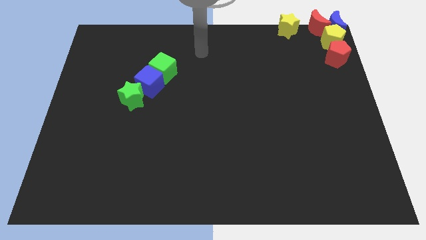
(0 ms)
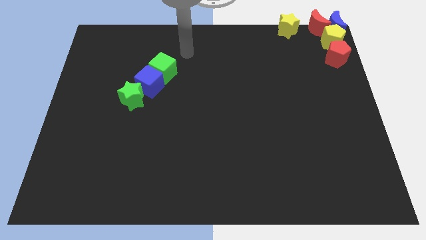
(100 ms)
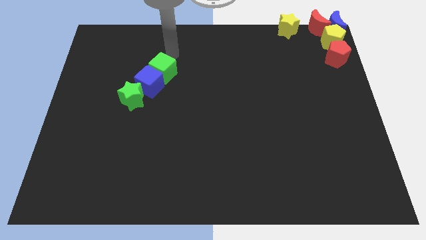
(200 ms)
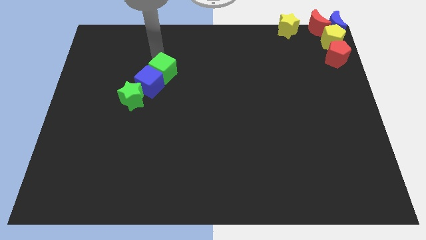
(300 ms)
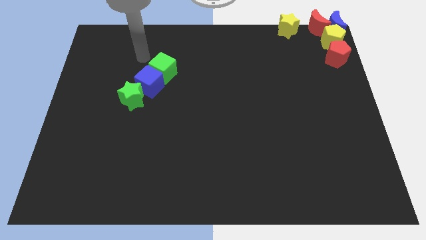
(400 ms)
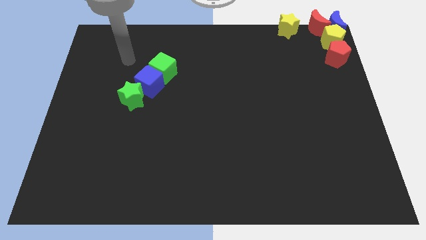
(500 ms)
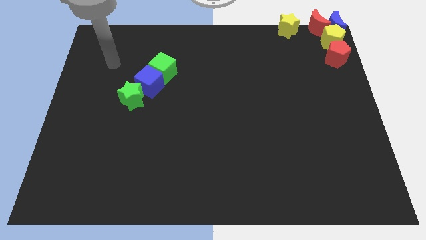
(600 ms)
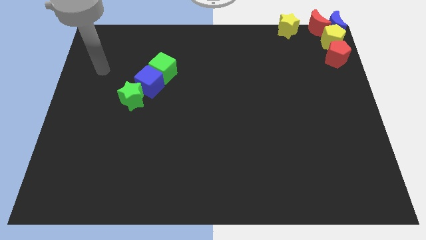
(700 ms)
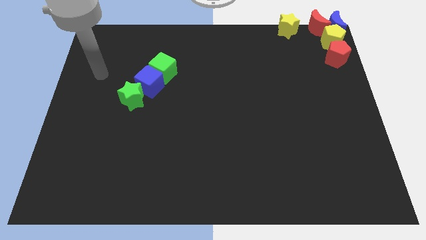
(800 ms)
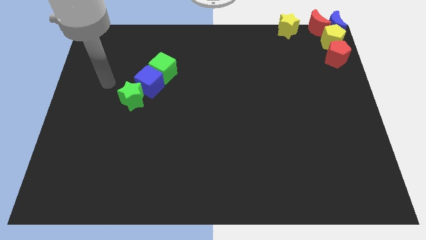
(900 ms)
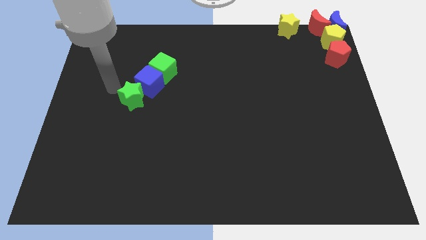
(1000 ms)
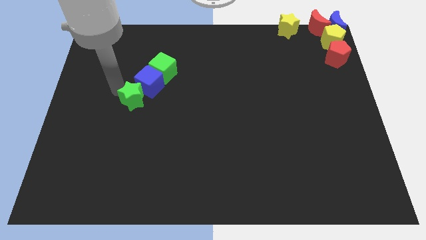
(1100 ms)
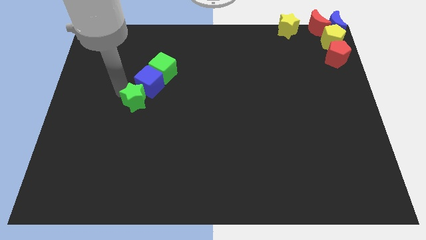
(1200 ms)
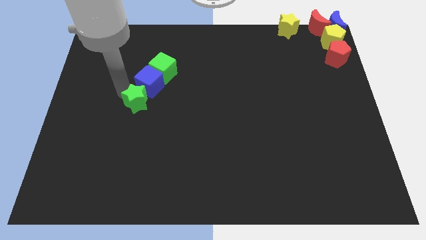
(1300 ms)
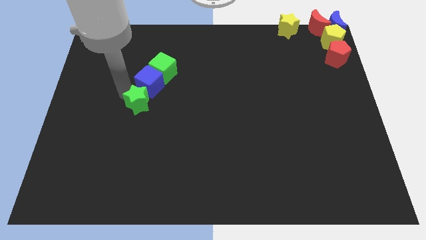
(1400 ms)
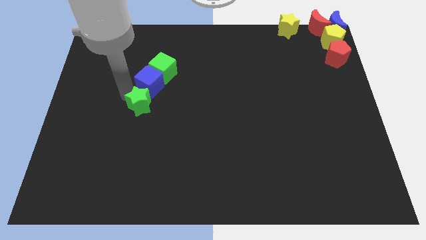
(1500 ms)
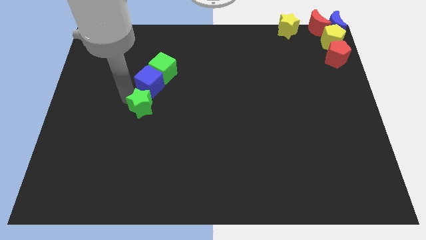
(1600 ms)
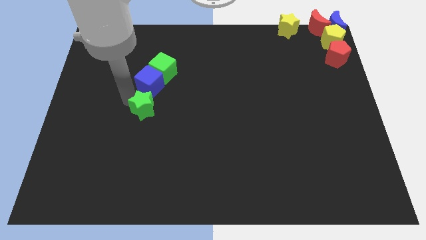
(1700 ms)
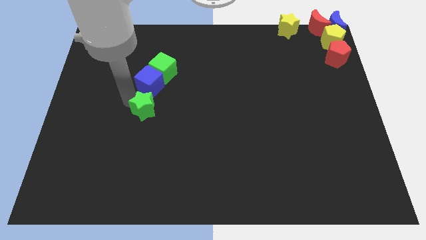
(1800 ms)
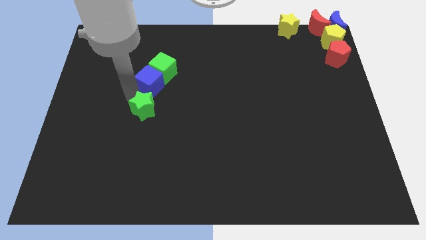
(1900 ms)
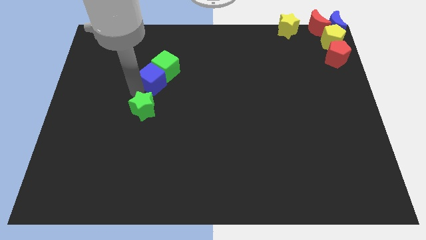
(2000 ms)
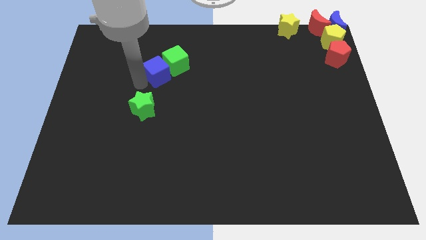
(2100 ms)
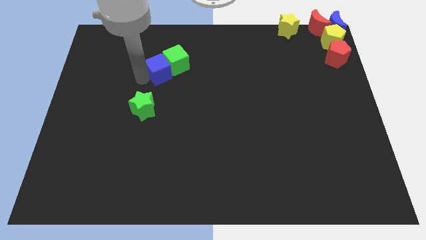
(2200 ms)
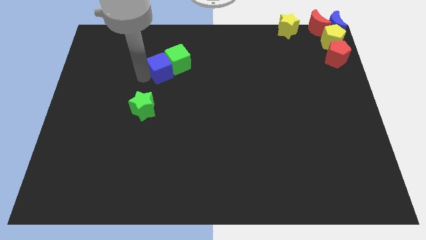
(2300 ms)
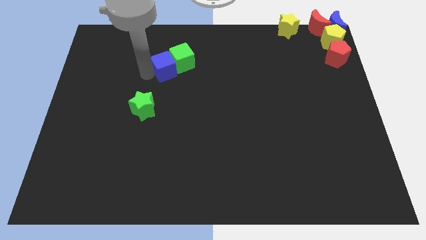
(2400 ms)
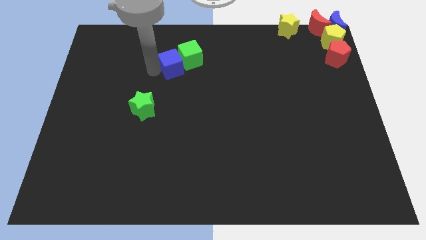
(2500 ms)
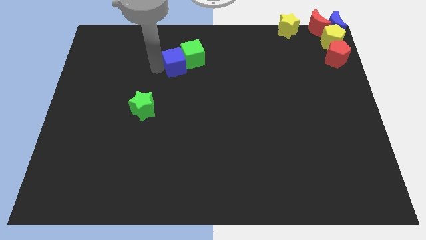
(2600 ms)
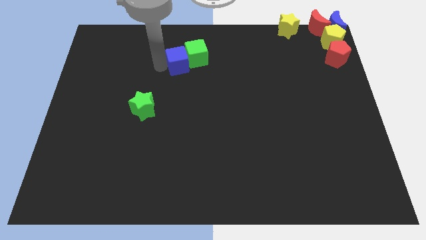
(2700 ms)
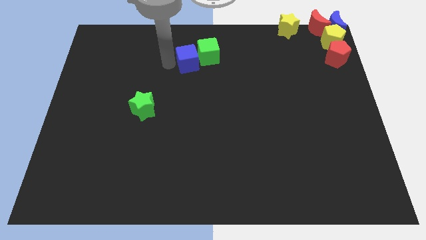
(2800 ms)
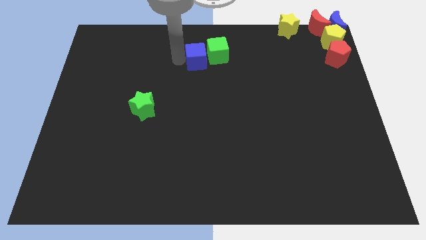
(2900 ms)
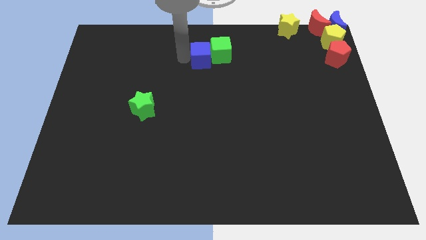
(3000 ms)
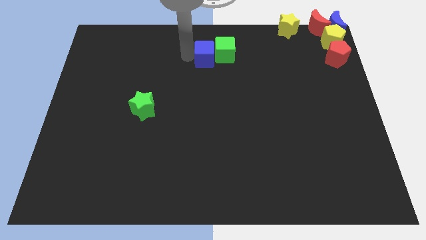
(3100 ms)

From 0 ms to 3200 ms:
push the group of cubes away from the green star

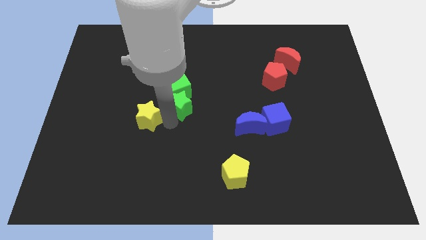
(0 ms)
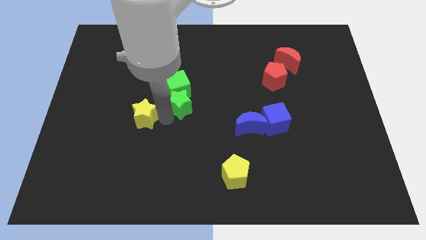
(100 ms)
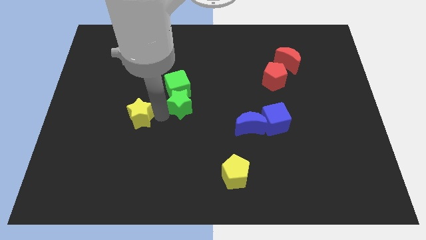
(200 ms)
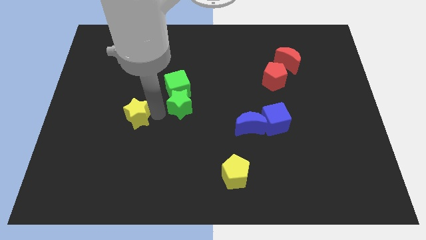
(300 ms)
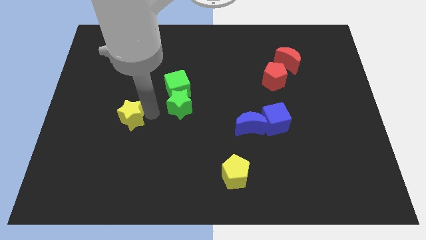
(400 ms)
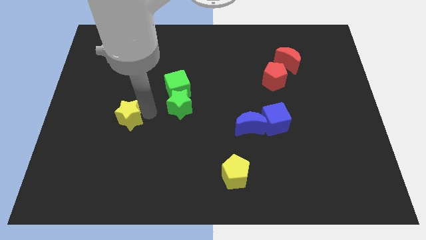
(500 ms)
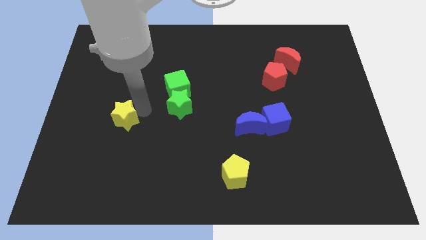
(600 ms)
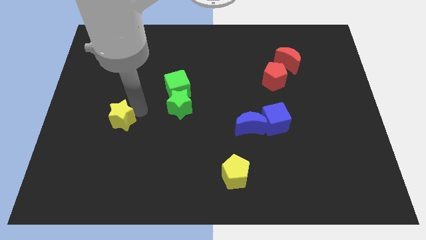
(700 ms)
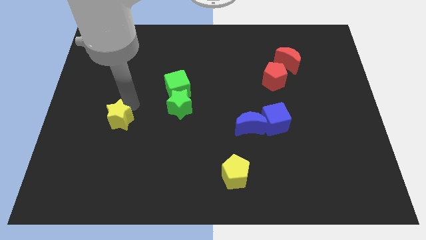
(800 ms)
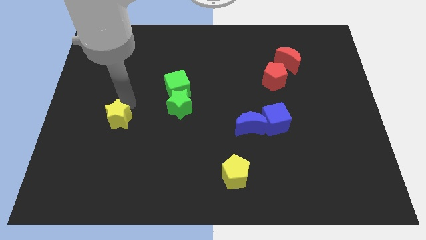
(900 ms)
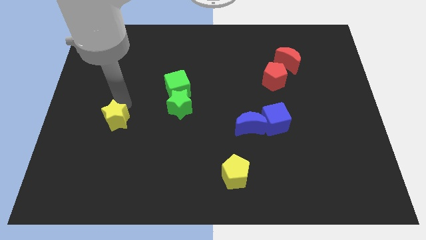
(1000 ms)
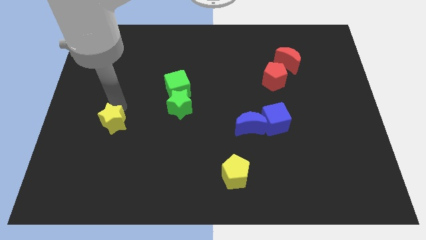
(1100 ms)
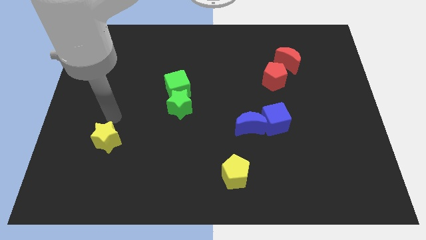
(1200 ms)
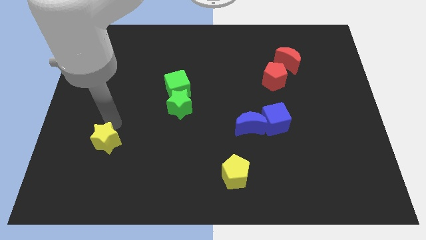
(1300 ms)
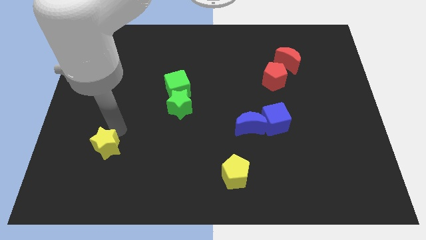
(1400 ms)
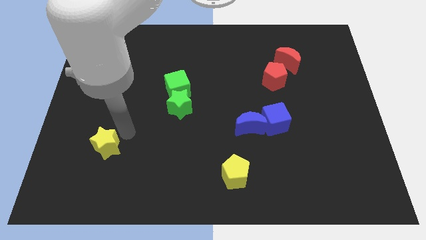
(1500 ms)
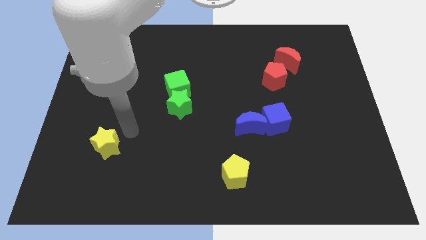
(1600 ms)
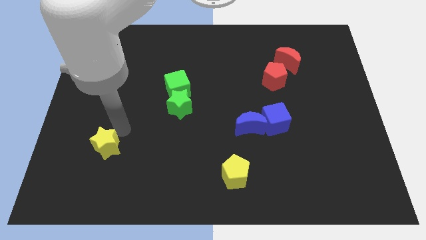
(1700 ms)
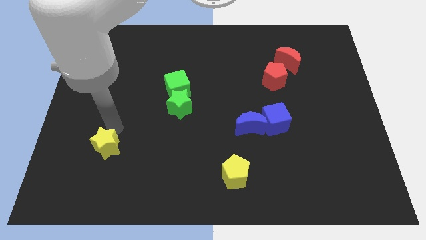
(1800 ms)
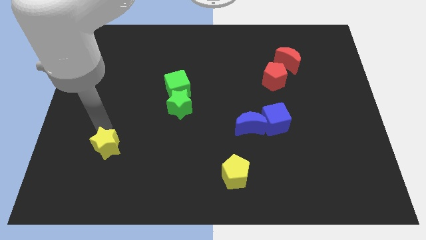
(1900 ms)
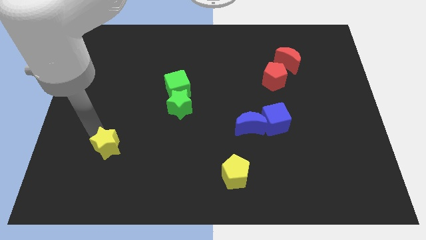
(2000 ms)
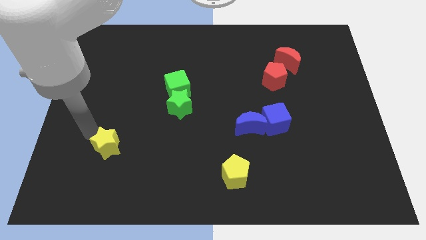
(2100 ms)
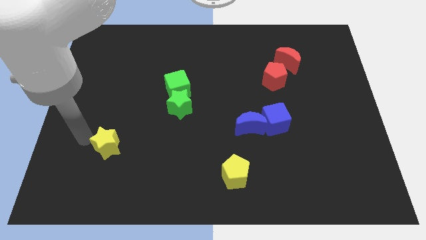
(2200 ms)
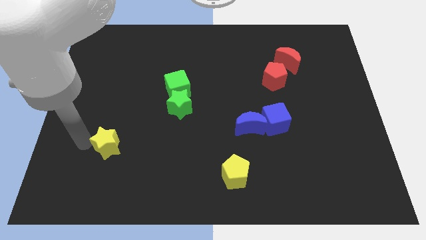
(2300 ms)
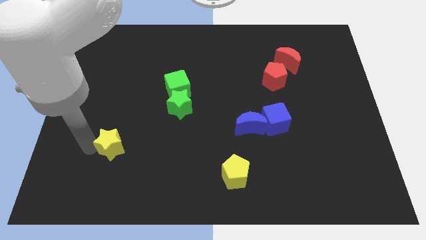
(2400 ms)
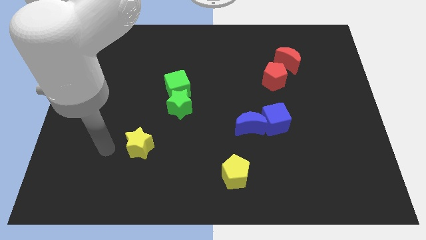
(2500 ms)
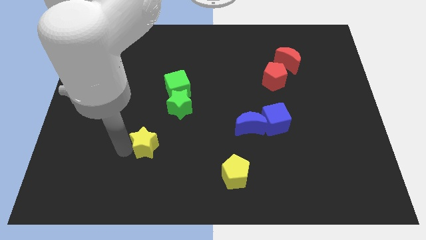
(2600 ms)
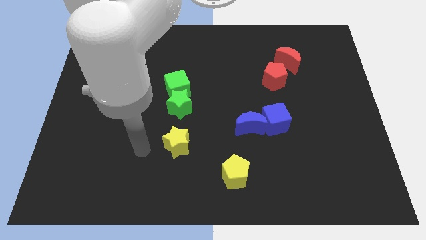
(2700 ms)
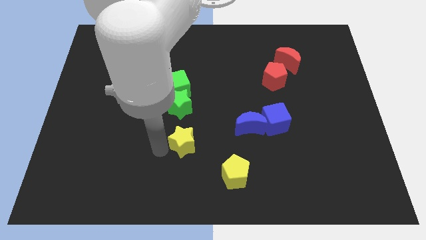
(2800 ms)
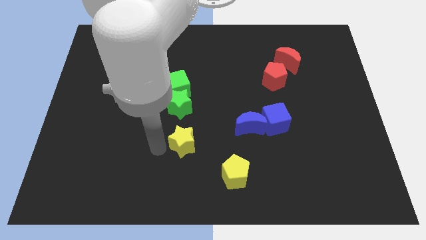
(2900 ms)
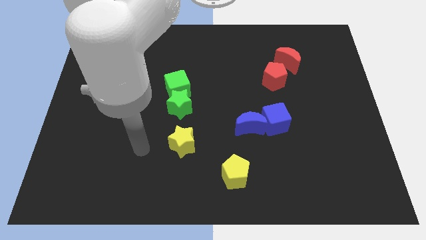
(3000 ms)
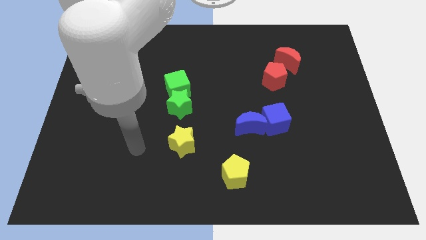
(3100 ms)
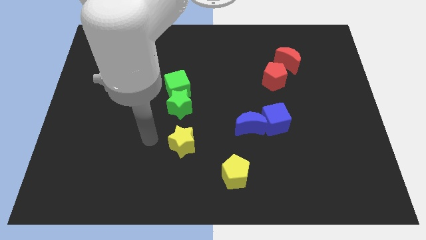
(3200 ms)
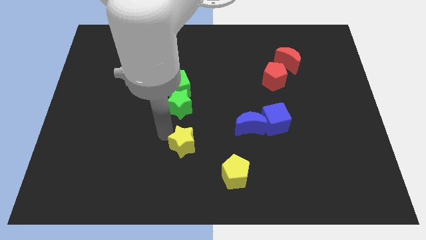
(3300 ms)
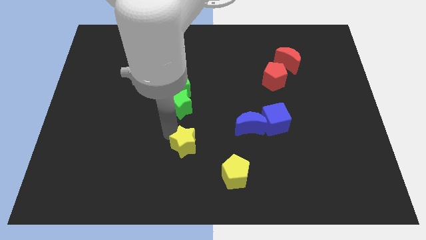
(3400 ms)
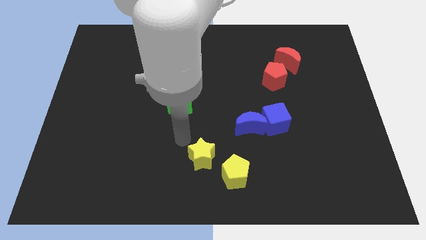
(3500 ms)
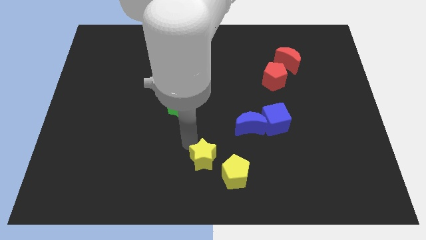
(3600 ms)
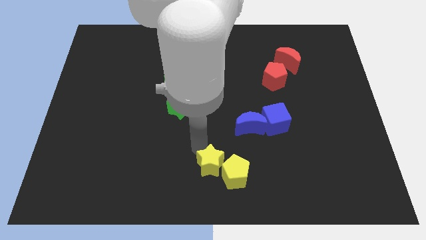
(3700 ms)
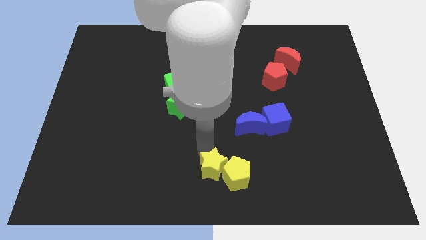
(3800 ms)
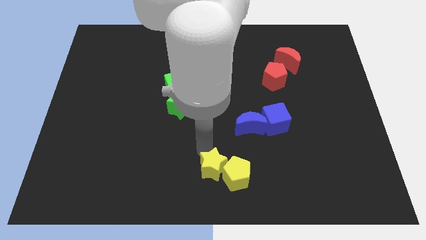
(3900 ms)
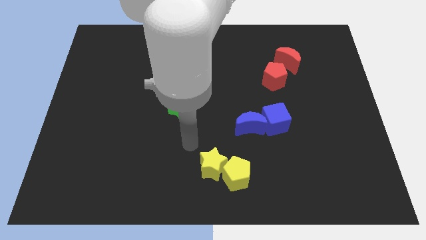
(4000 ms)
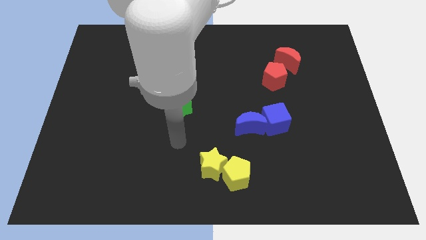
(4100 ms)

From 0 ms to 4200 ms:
push the yellow satr to the left of the yellow pentagon

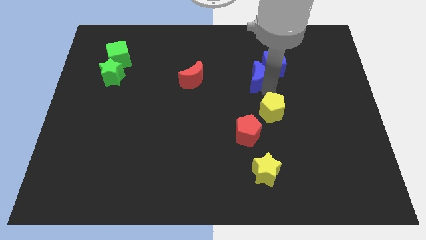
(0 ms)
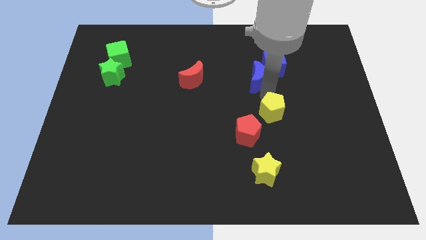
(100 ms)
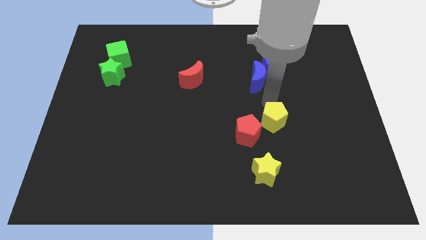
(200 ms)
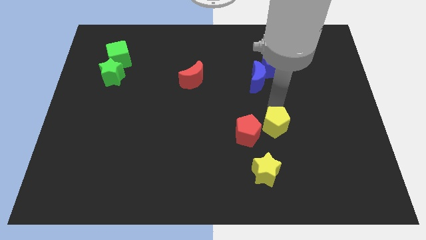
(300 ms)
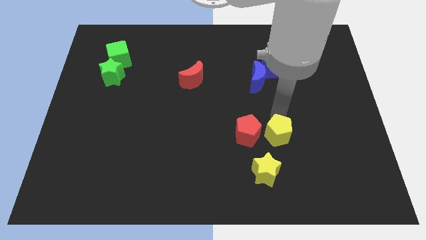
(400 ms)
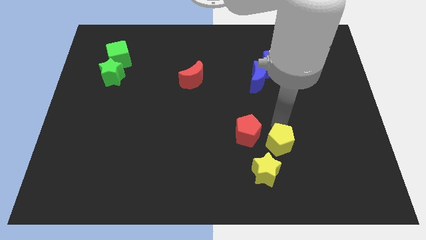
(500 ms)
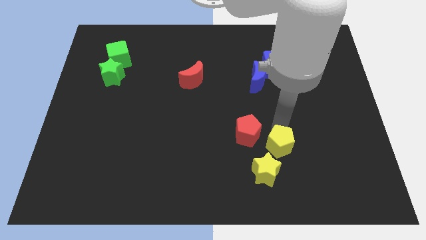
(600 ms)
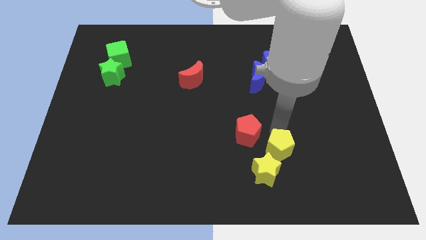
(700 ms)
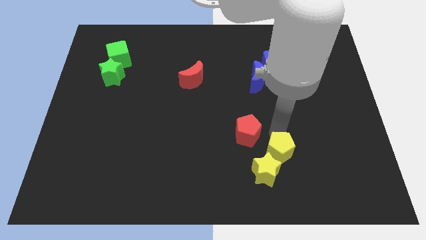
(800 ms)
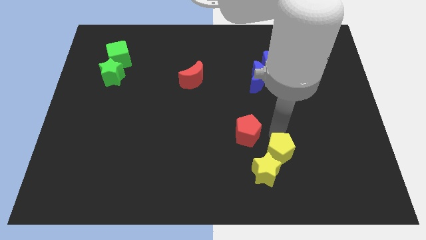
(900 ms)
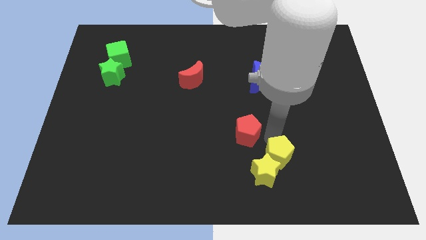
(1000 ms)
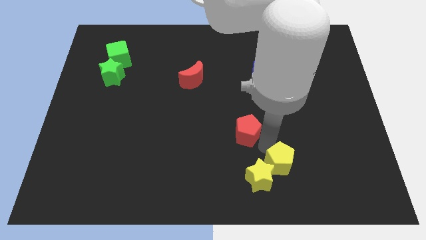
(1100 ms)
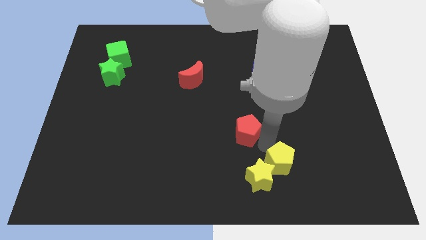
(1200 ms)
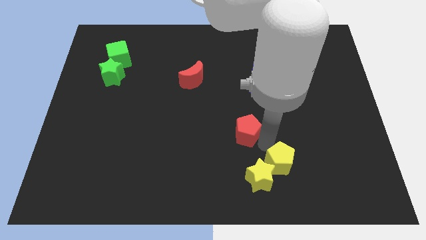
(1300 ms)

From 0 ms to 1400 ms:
move the yellow pentagon to the top right side of the yellow star
